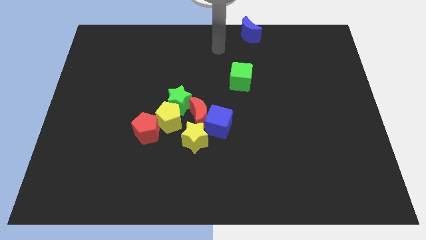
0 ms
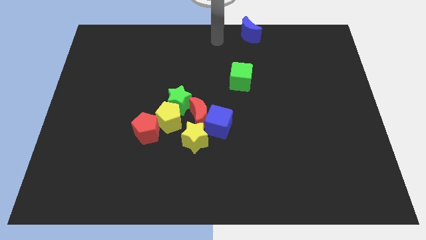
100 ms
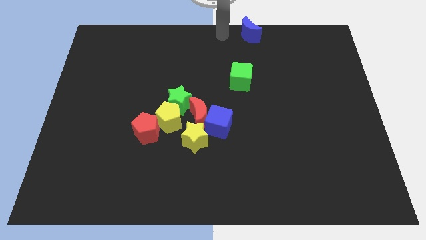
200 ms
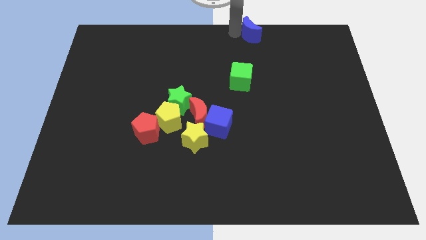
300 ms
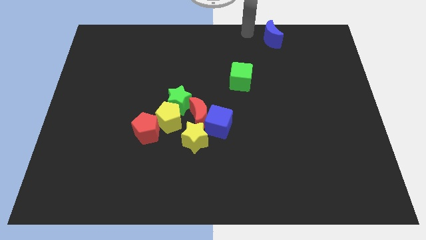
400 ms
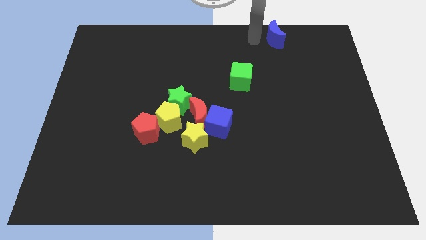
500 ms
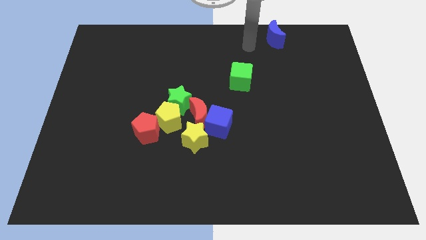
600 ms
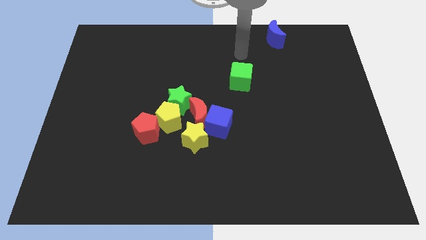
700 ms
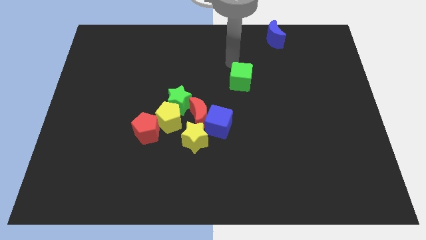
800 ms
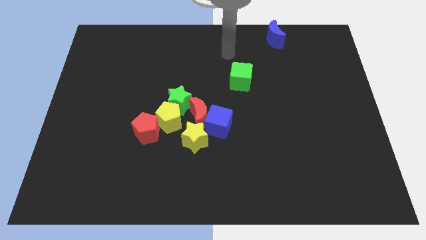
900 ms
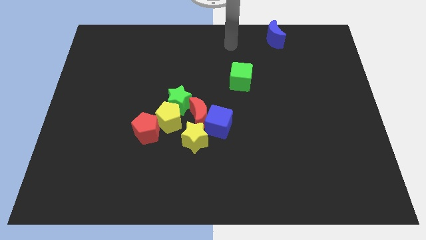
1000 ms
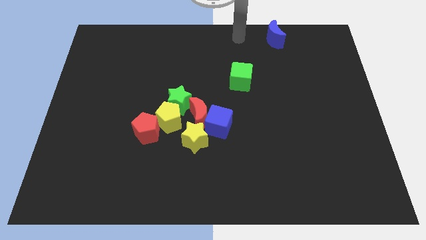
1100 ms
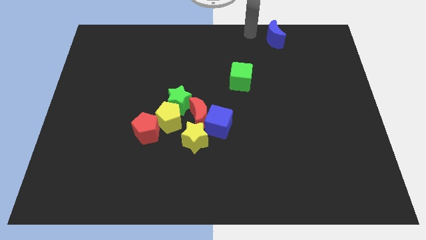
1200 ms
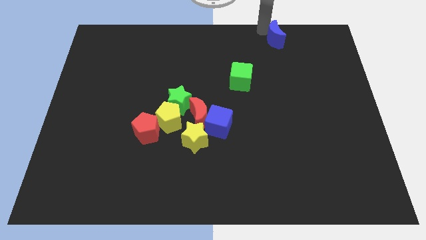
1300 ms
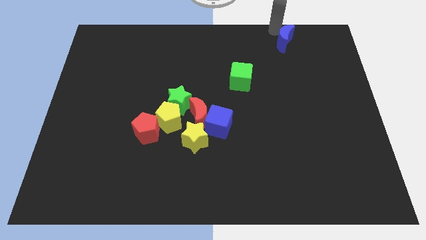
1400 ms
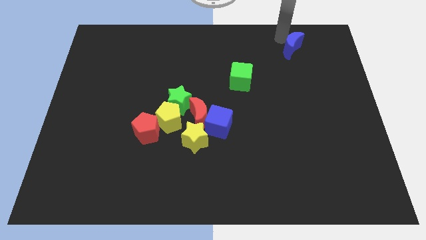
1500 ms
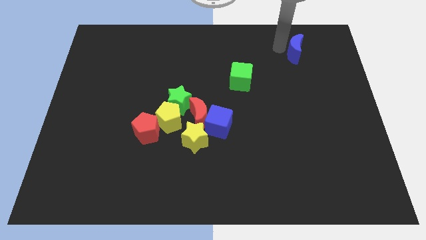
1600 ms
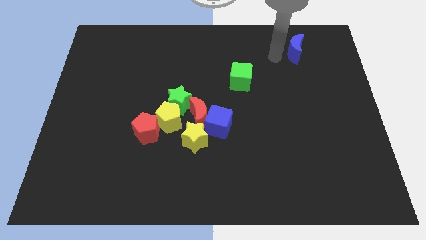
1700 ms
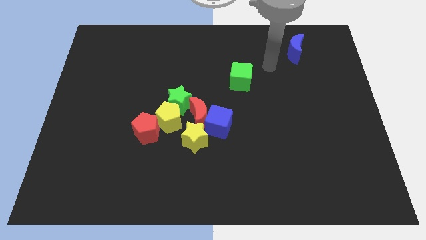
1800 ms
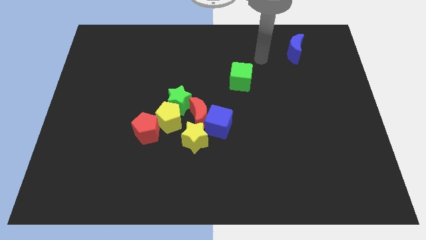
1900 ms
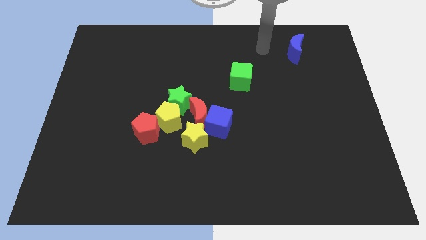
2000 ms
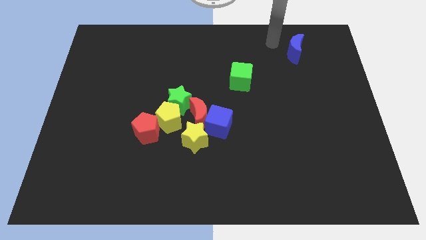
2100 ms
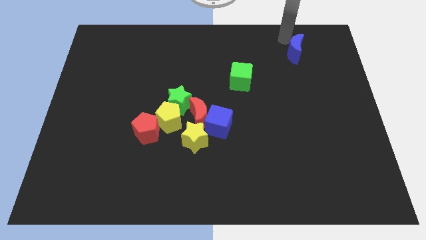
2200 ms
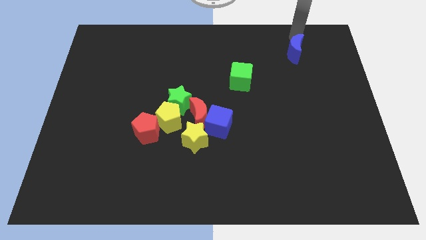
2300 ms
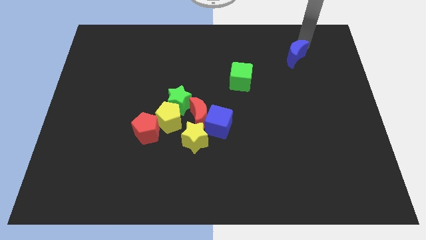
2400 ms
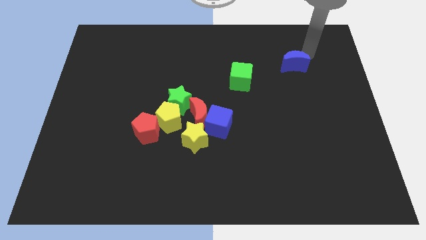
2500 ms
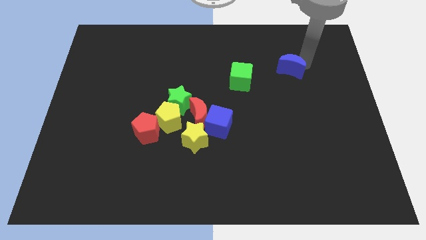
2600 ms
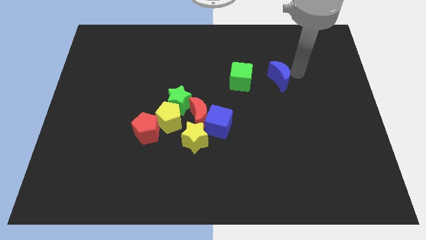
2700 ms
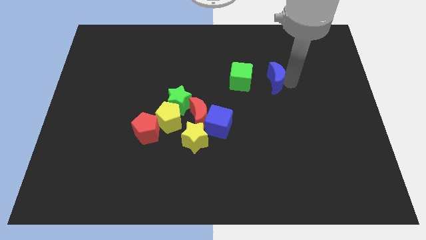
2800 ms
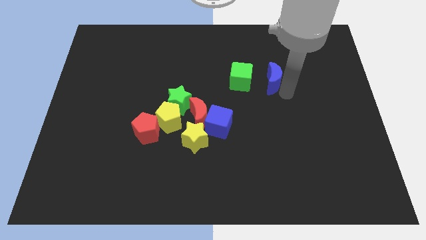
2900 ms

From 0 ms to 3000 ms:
move the blue crescent to the right of the green cube

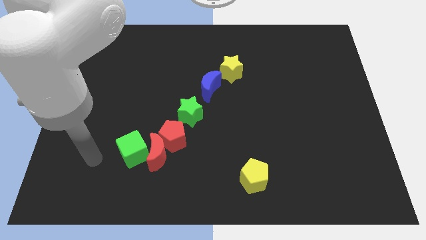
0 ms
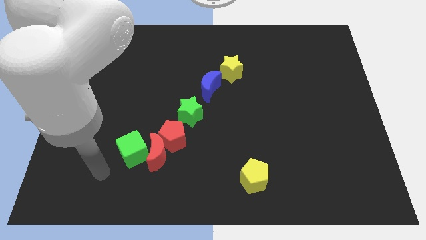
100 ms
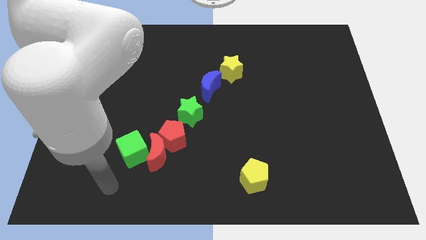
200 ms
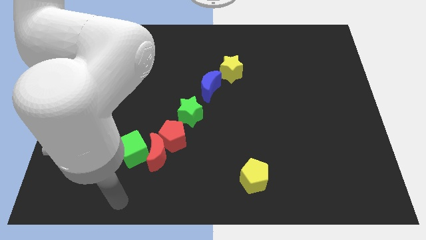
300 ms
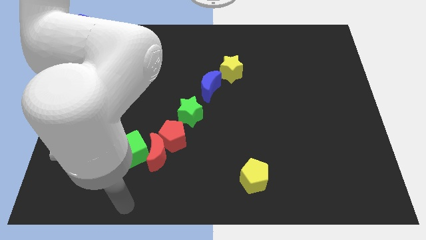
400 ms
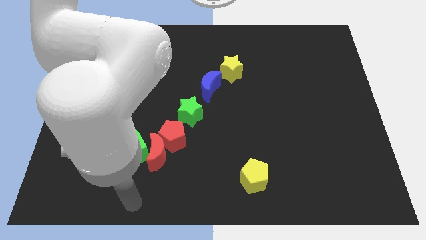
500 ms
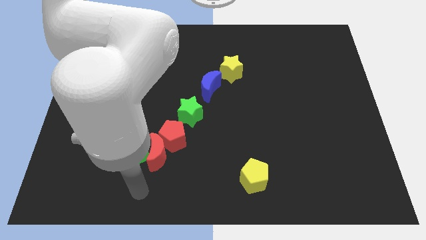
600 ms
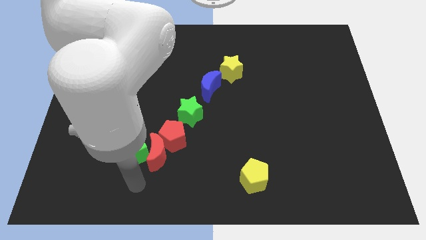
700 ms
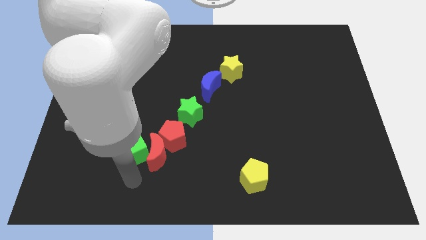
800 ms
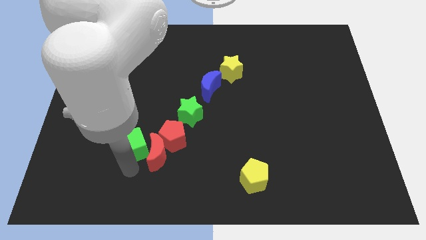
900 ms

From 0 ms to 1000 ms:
point your arm below green cube

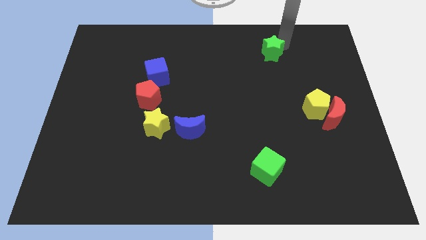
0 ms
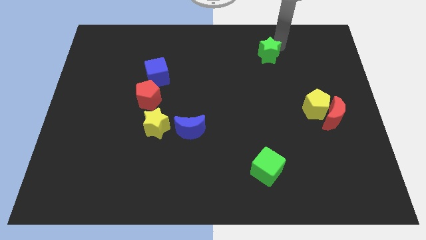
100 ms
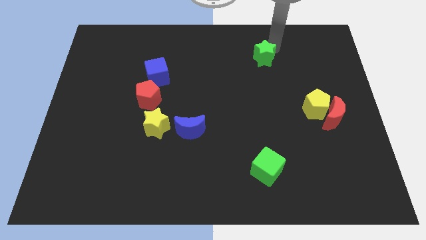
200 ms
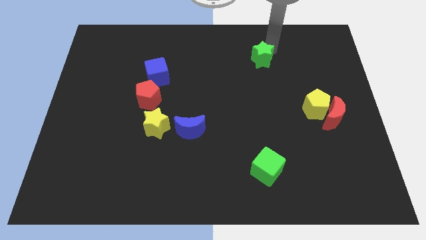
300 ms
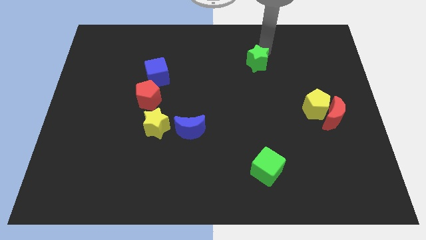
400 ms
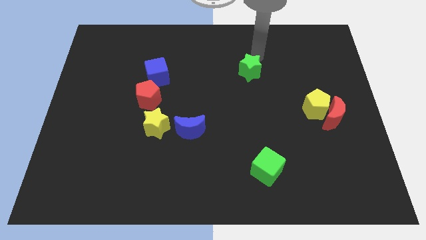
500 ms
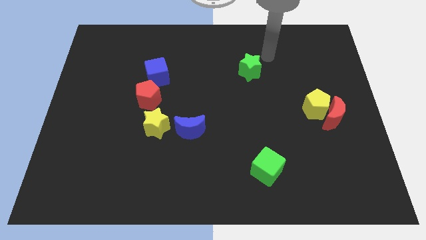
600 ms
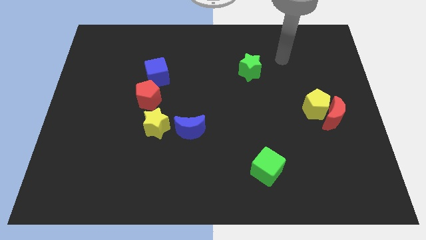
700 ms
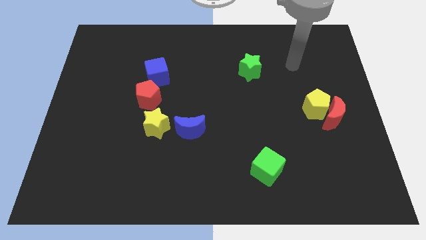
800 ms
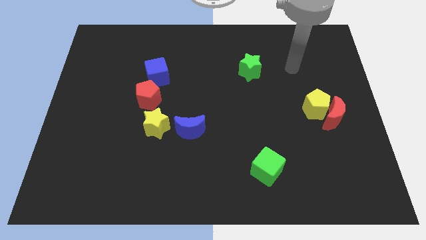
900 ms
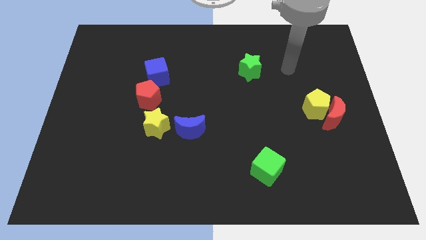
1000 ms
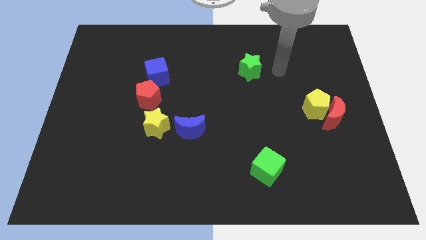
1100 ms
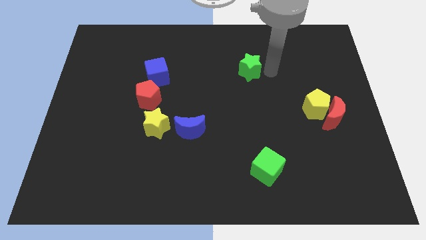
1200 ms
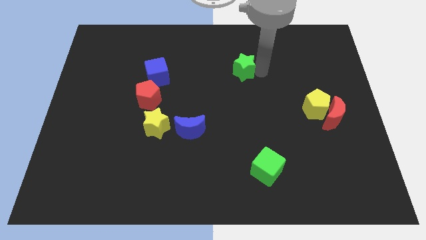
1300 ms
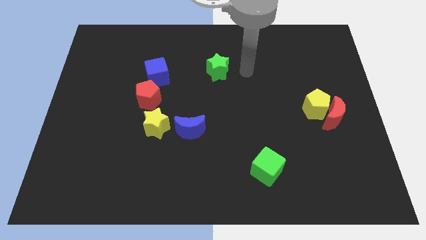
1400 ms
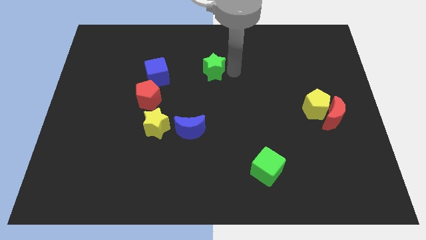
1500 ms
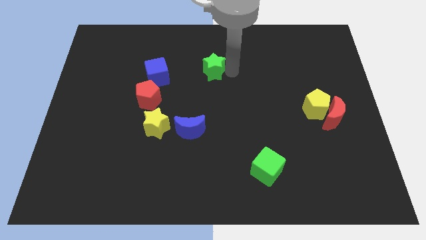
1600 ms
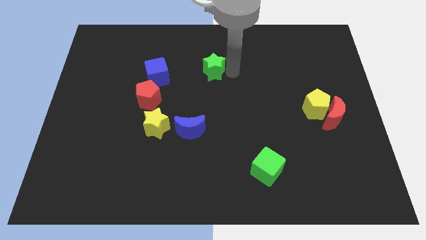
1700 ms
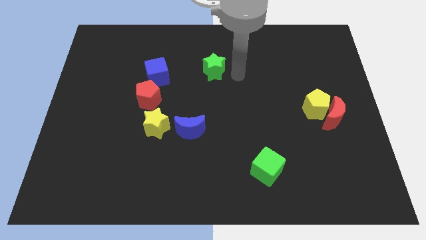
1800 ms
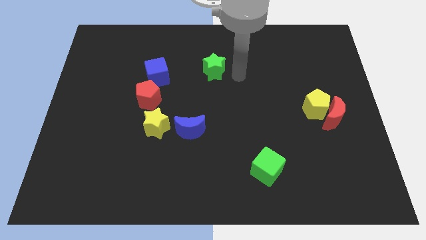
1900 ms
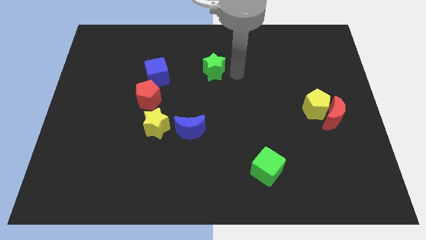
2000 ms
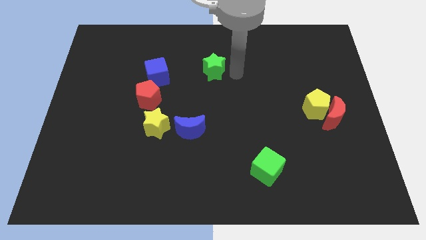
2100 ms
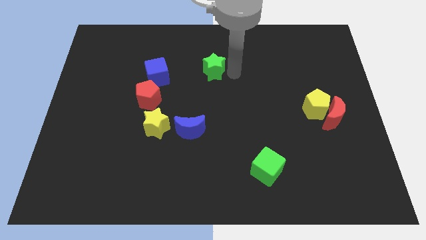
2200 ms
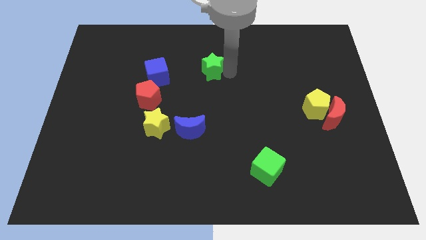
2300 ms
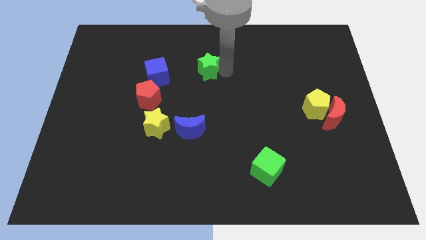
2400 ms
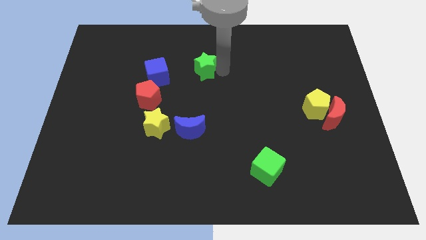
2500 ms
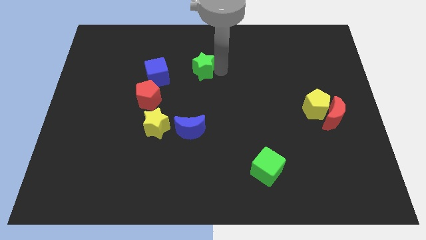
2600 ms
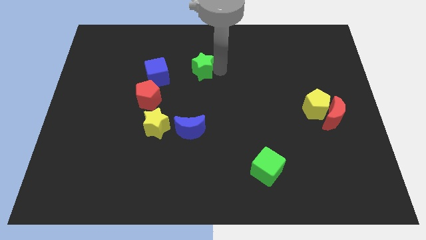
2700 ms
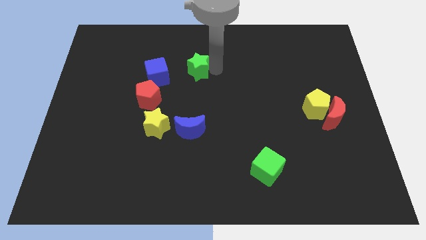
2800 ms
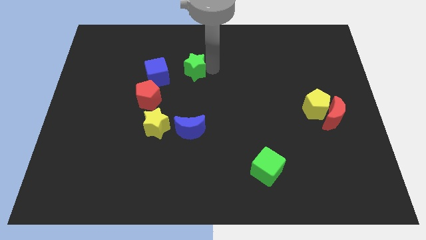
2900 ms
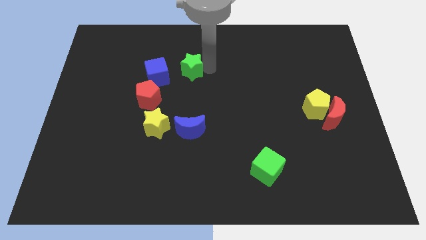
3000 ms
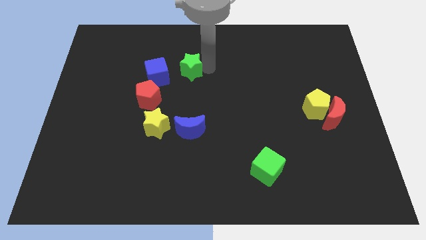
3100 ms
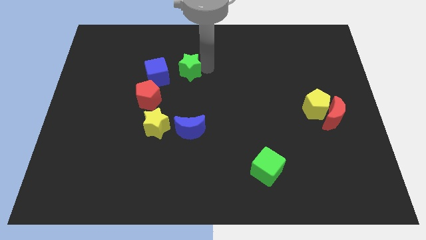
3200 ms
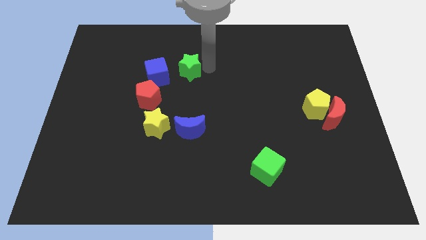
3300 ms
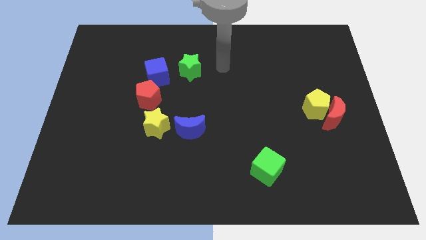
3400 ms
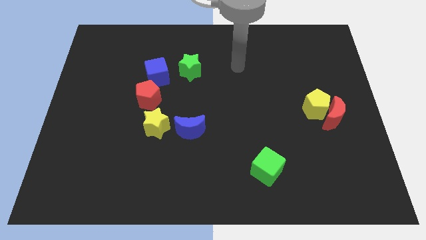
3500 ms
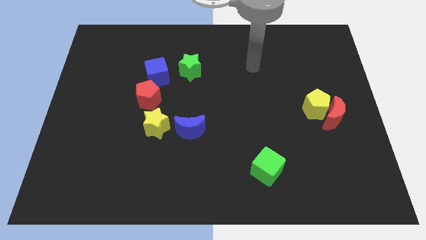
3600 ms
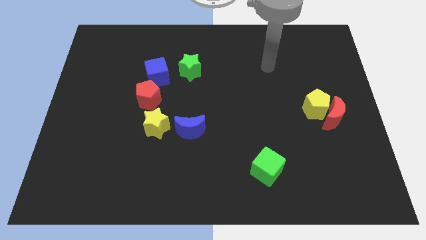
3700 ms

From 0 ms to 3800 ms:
push the green star towards the blue cube

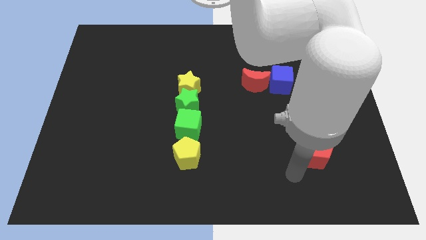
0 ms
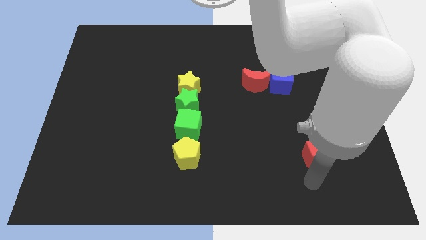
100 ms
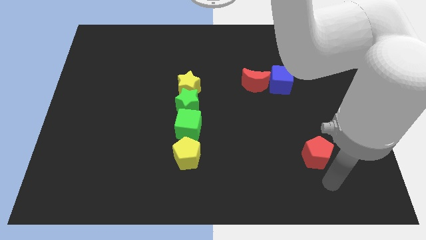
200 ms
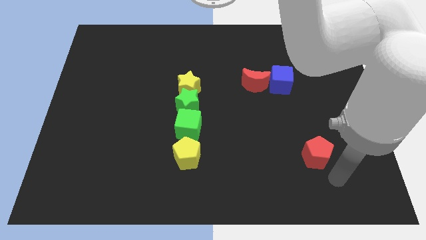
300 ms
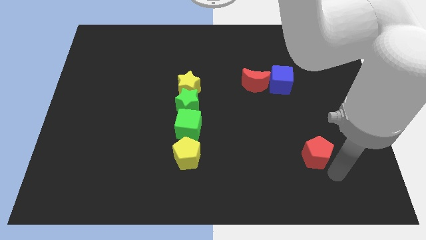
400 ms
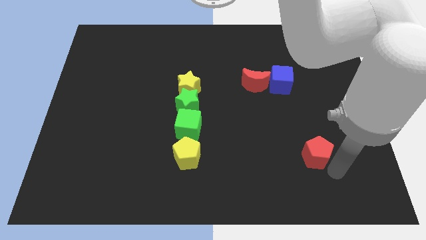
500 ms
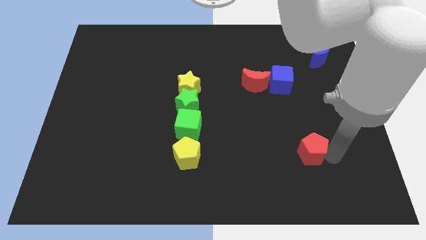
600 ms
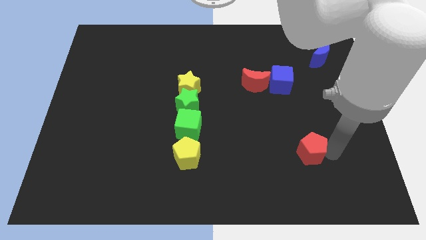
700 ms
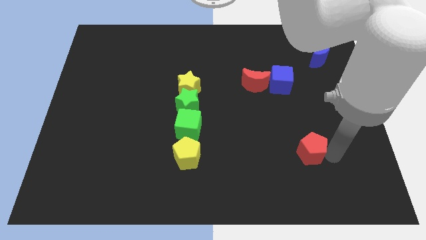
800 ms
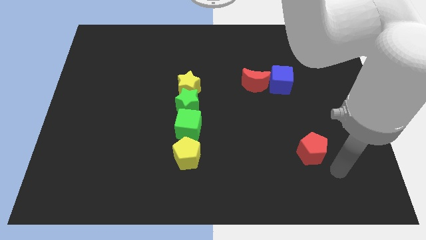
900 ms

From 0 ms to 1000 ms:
move red pentagon slightly up

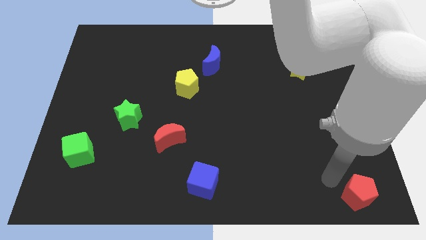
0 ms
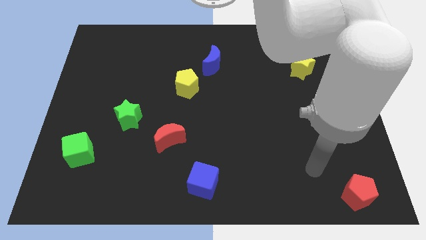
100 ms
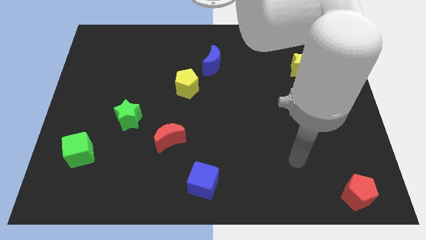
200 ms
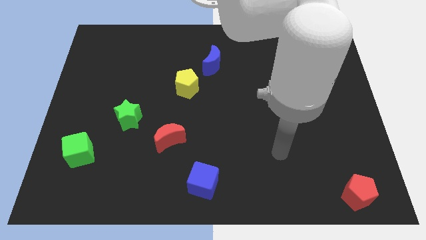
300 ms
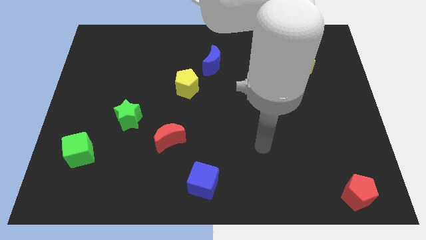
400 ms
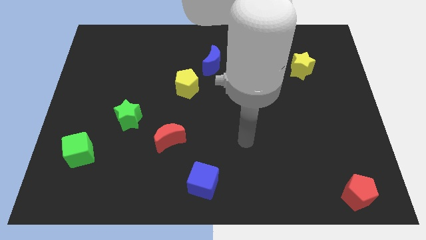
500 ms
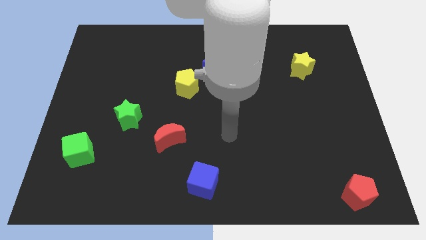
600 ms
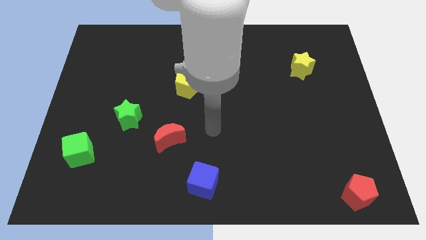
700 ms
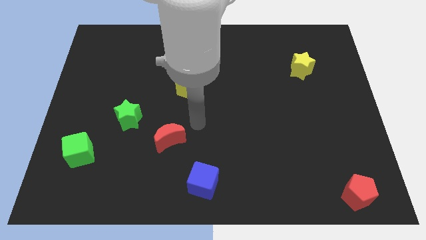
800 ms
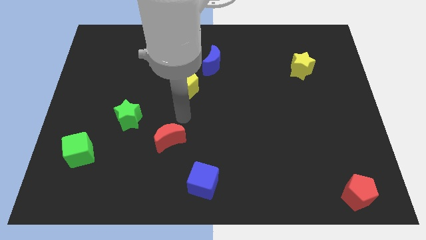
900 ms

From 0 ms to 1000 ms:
move your arm away from red pentagon
